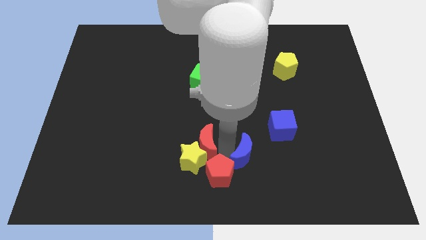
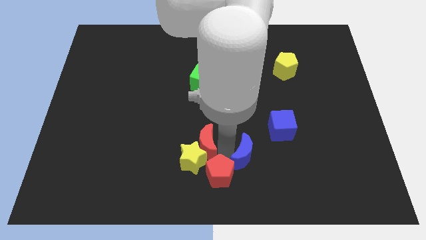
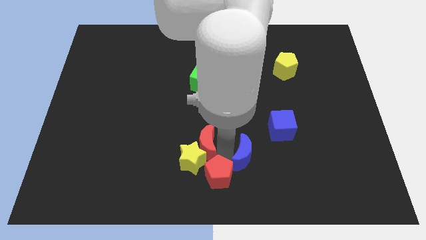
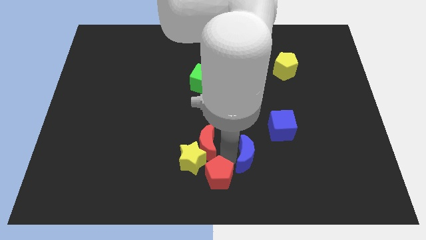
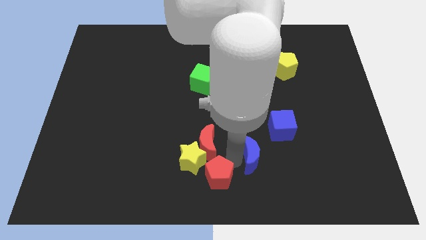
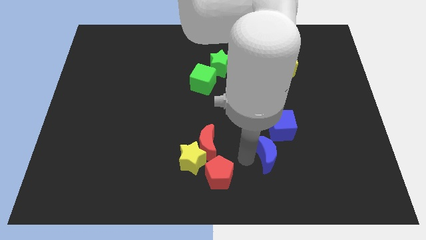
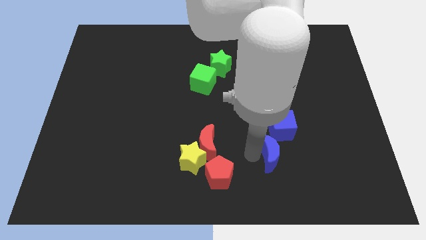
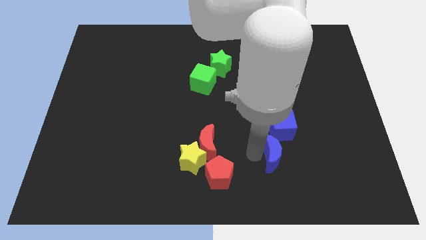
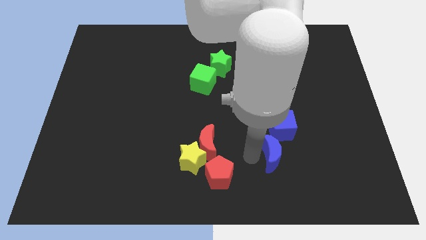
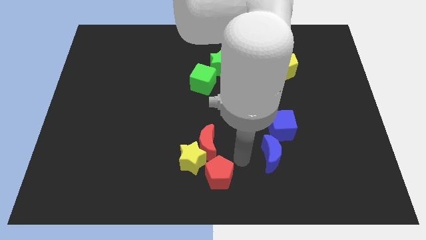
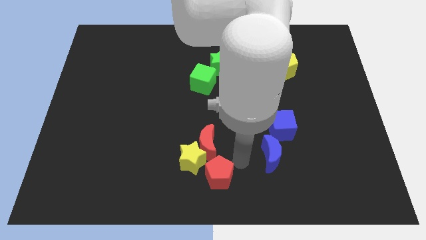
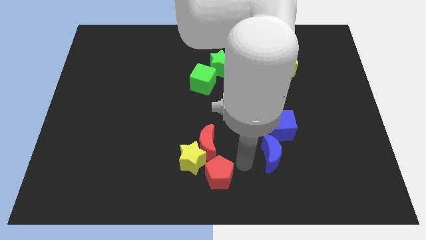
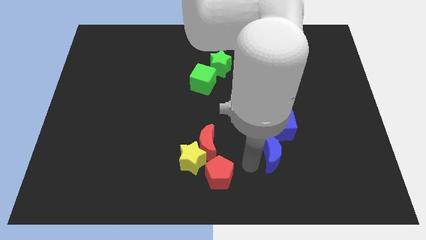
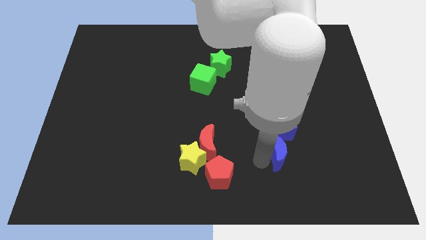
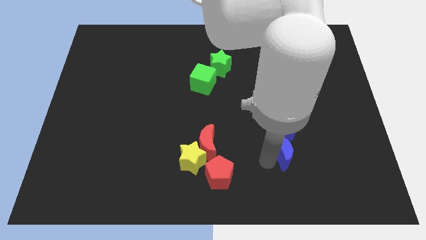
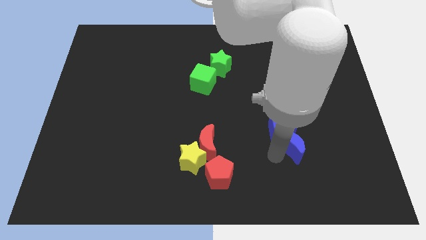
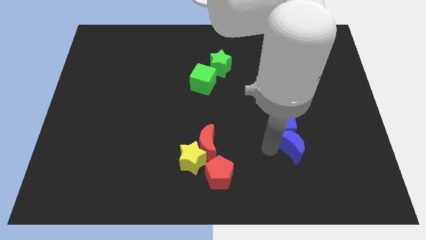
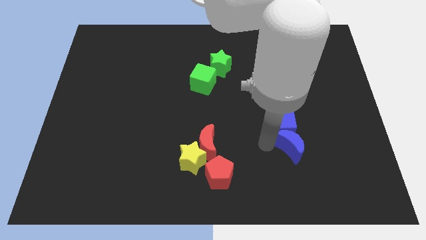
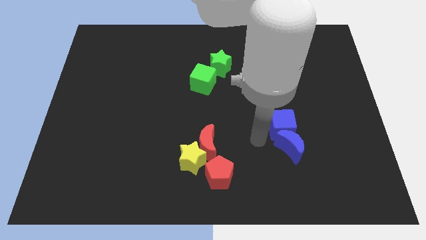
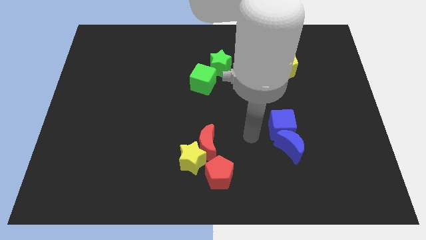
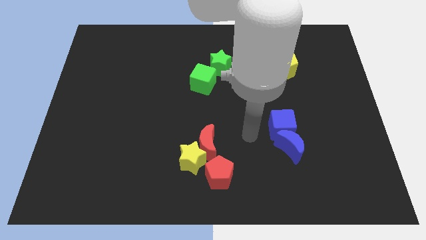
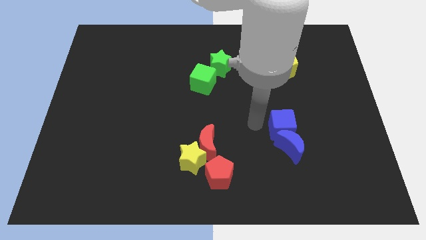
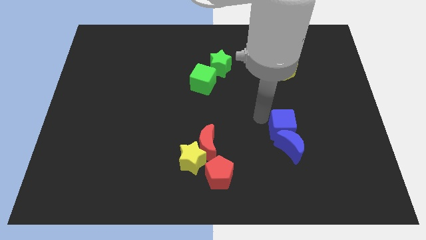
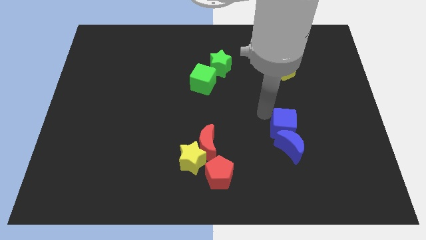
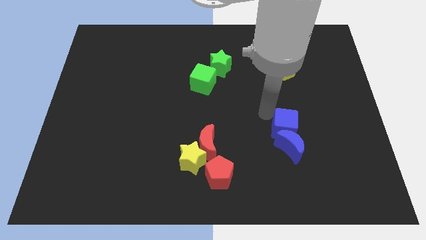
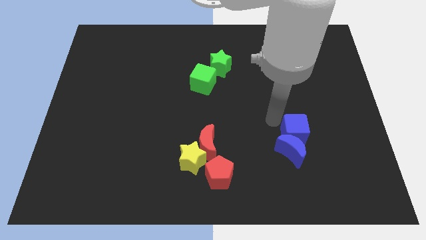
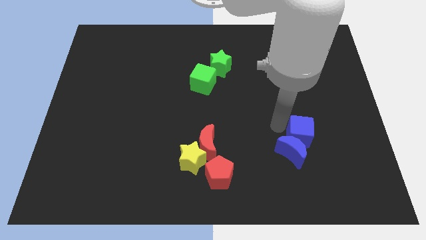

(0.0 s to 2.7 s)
push the blue moon below the blue cube

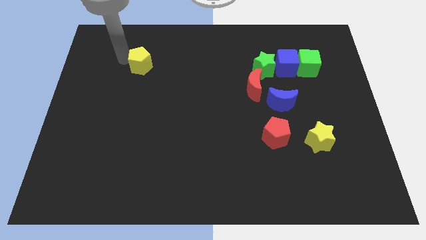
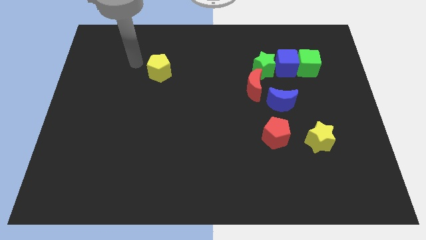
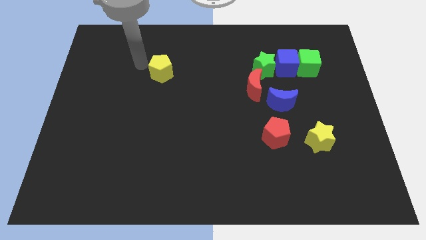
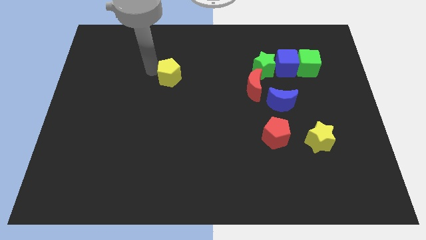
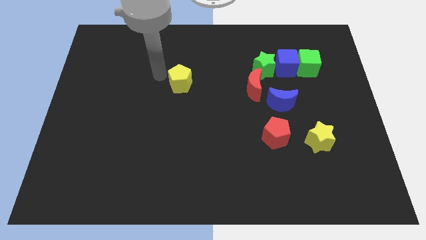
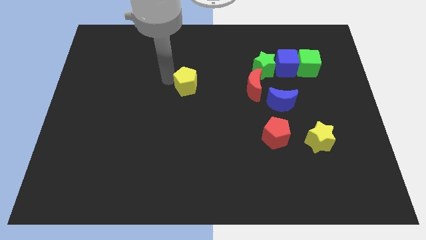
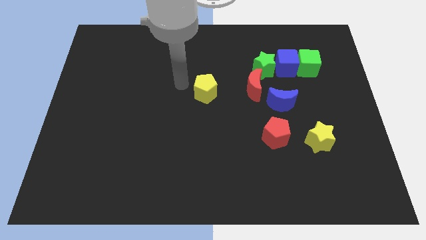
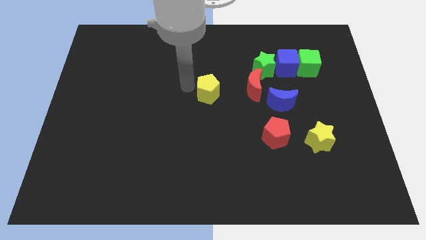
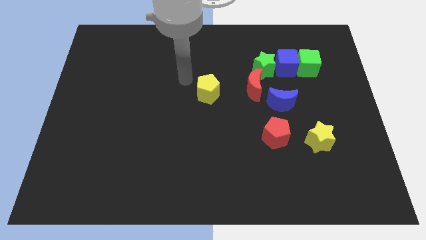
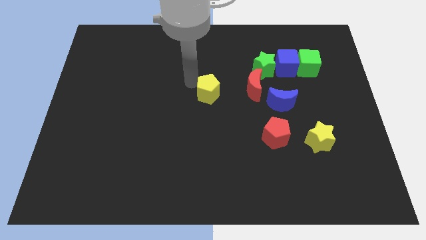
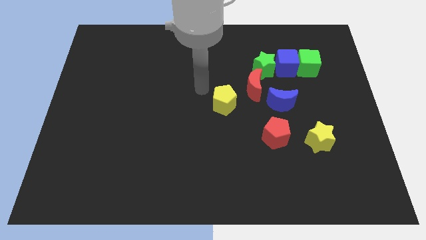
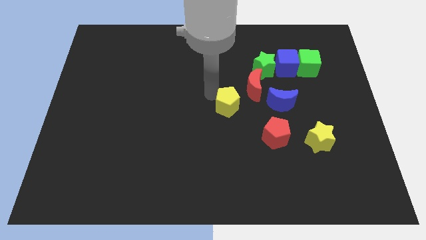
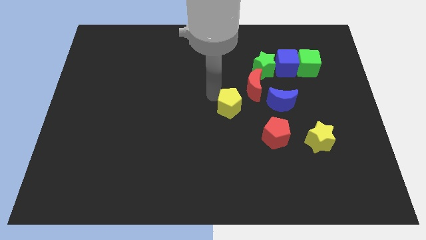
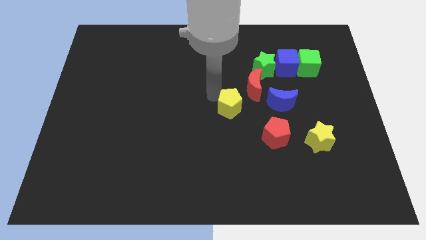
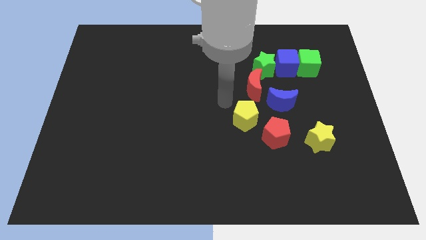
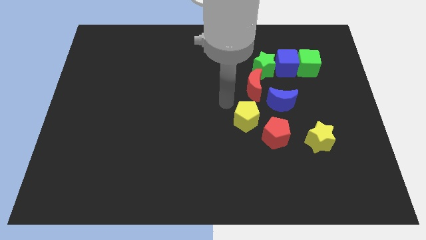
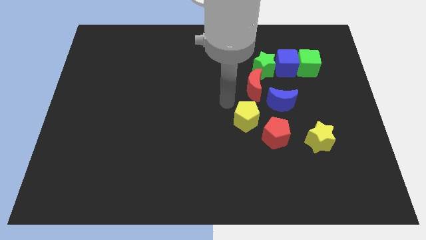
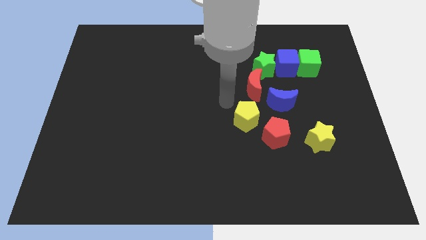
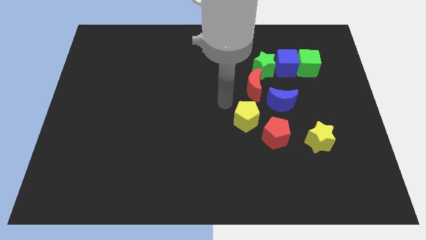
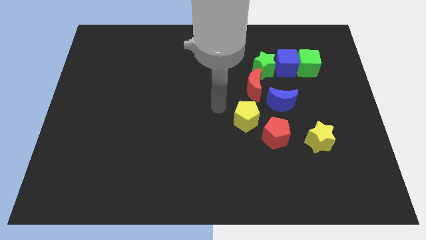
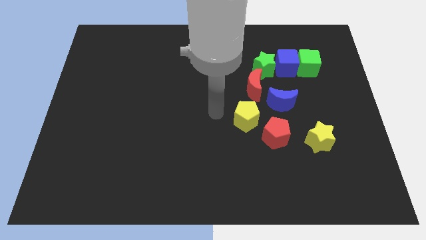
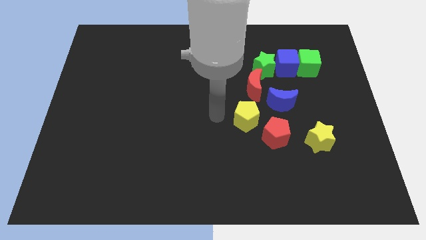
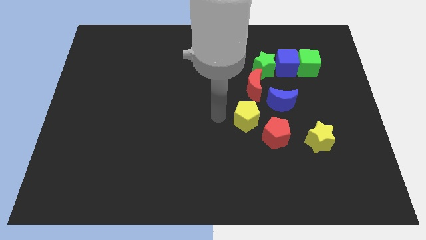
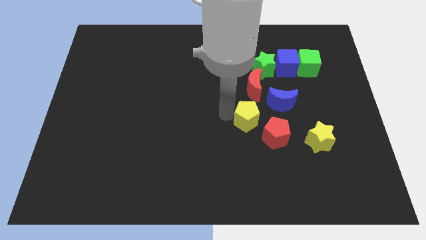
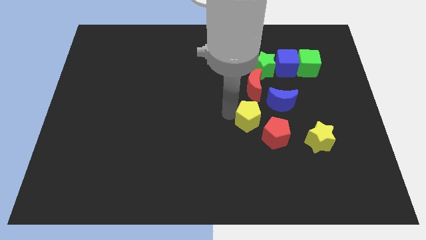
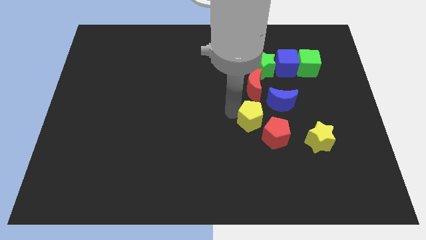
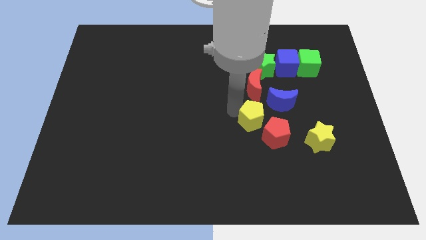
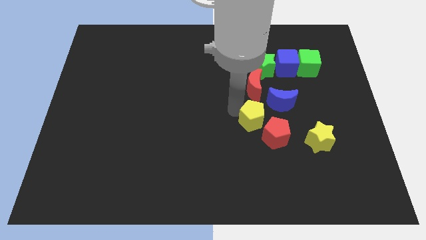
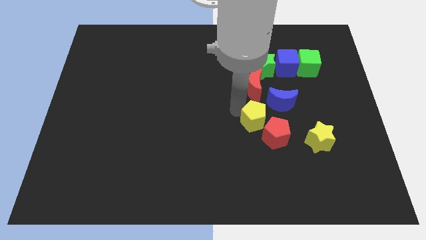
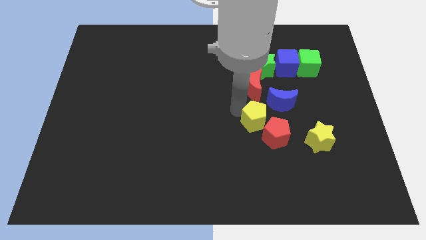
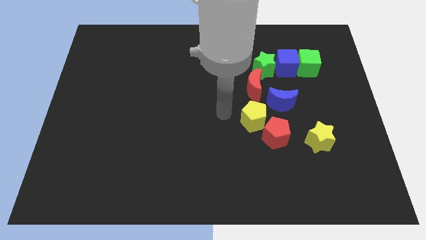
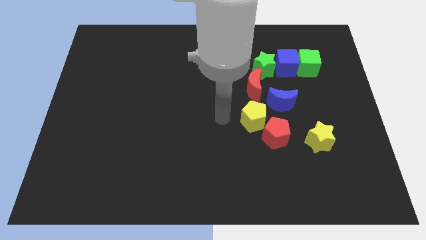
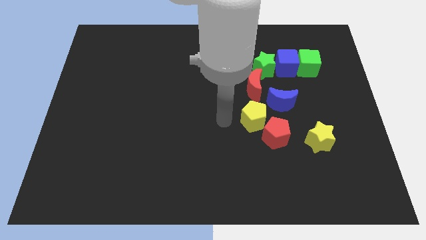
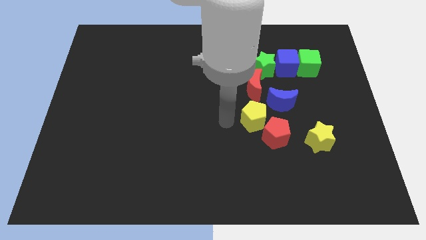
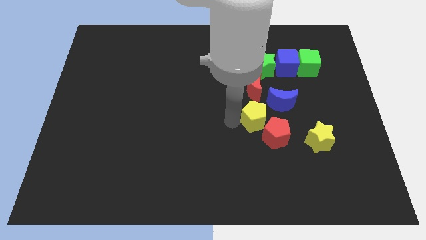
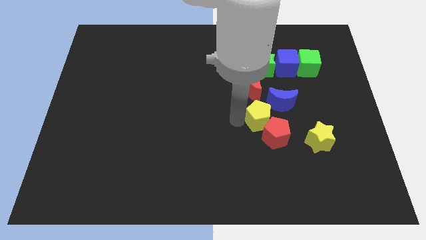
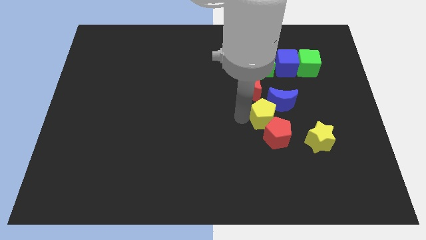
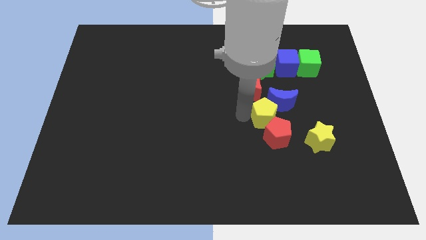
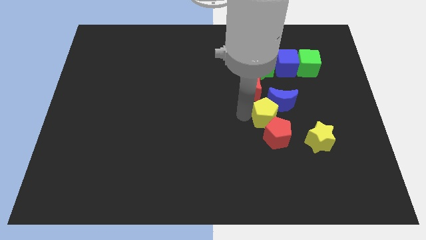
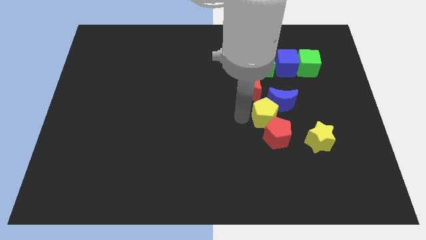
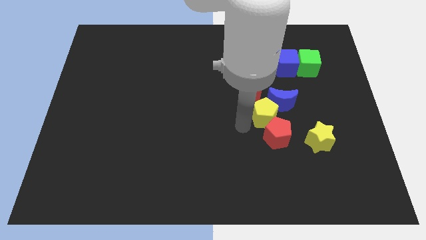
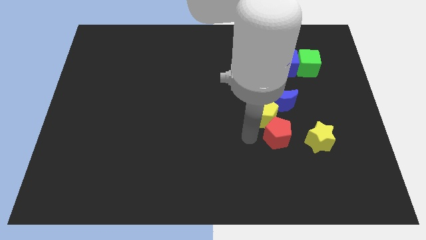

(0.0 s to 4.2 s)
move the yellow pentagon below the red crescent

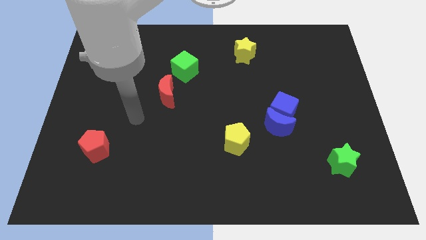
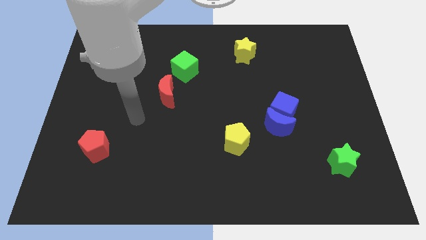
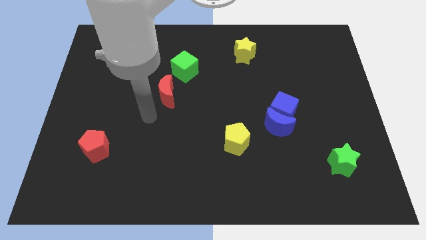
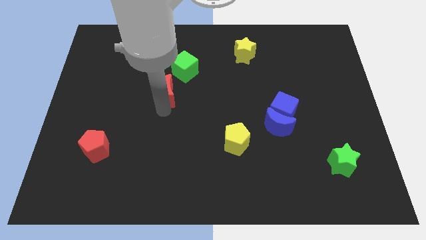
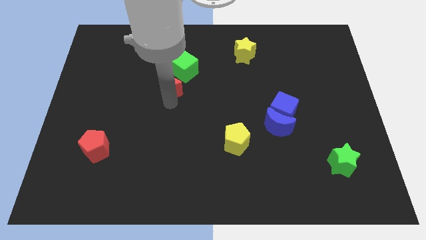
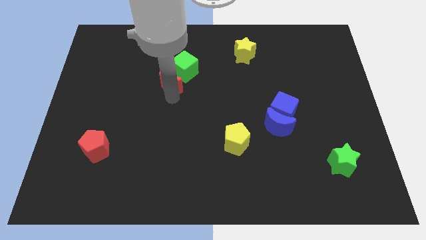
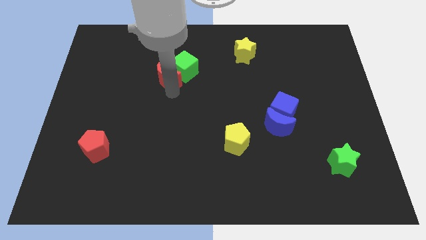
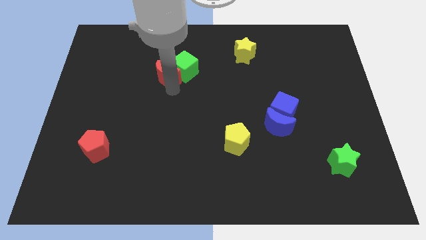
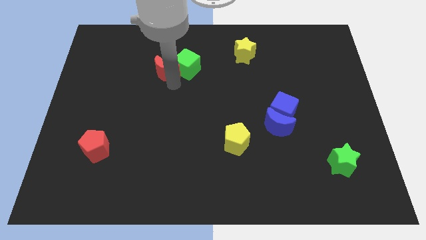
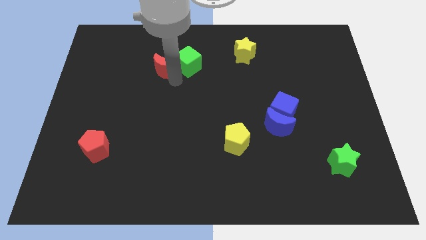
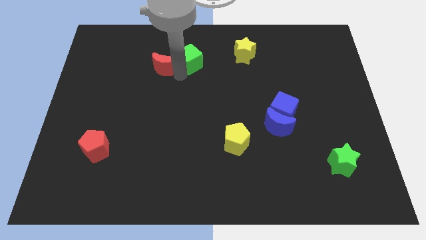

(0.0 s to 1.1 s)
push the red crescent to the left of the green cube

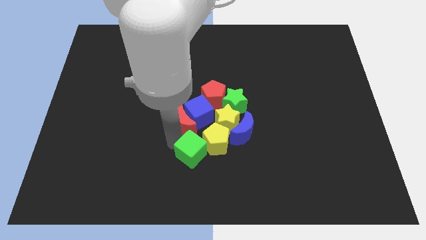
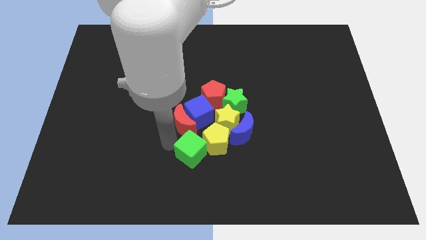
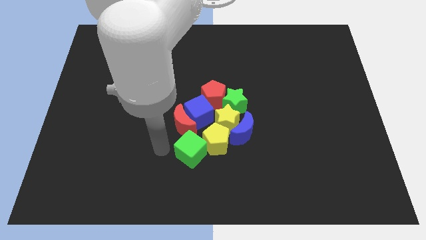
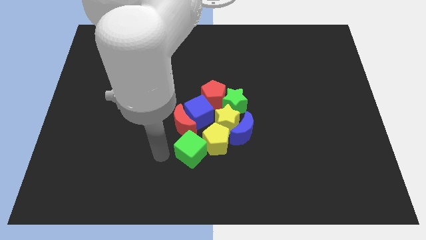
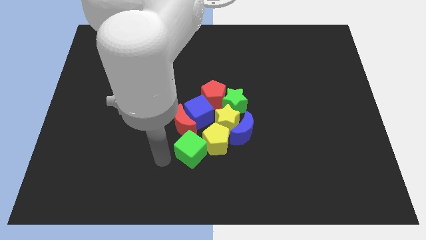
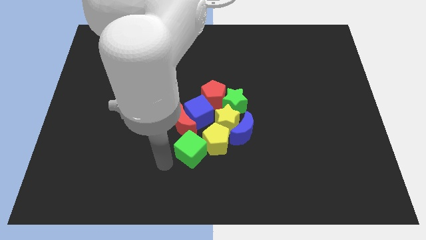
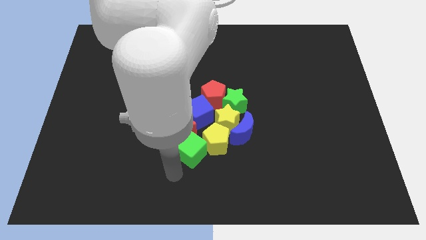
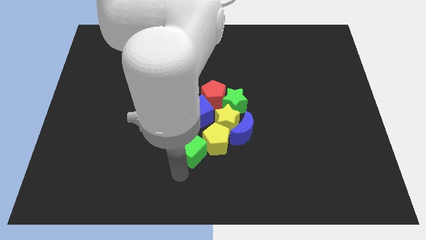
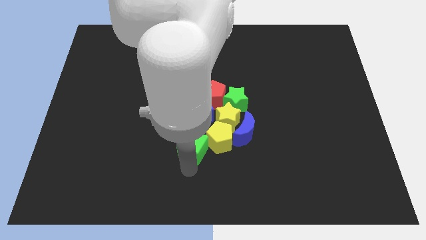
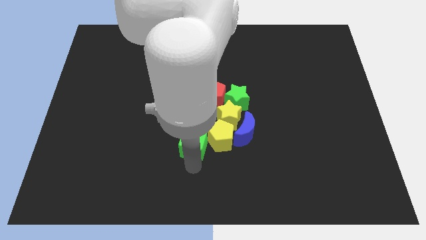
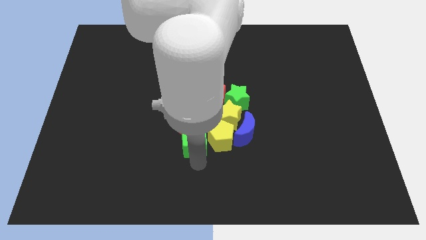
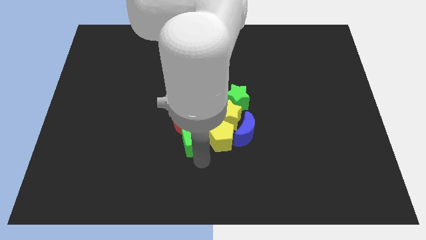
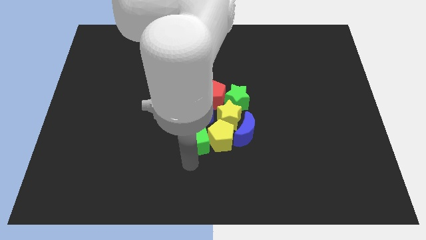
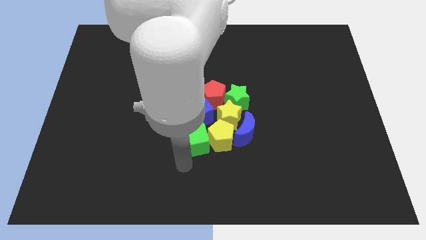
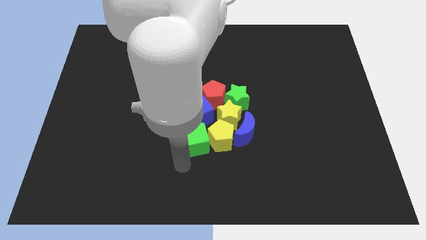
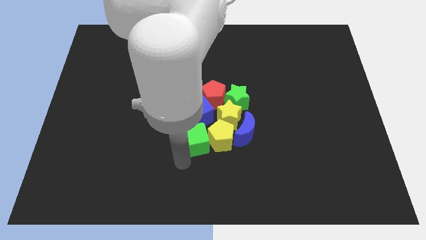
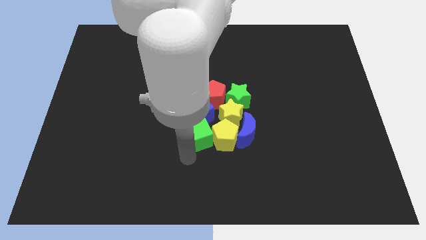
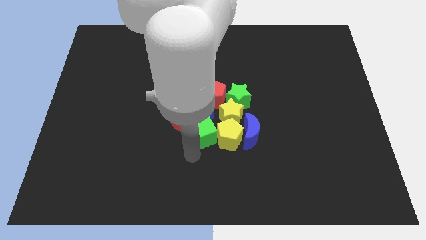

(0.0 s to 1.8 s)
slightly push the green cube into the group of objects
